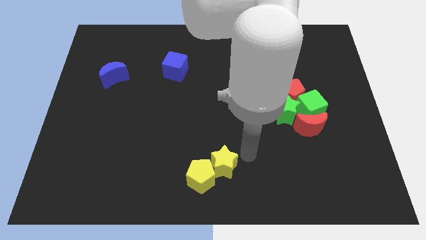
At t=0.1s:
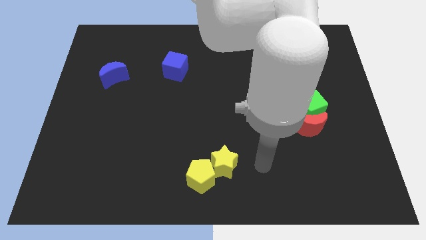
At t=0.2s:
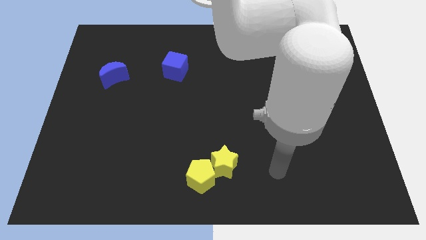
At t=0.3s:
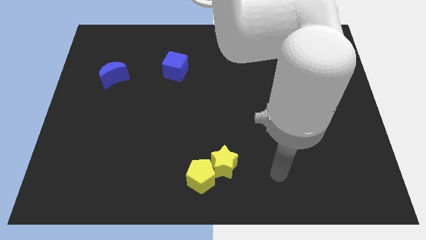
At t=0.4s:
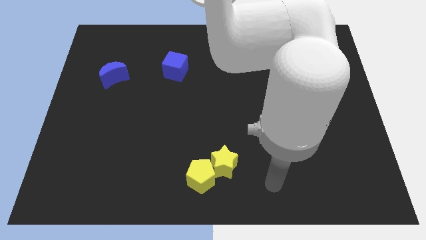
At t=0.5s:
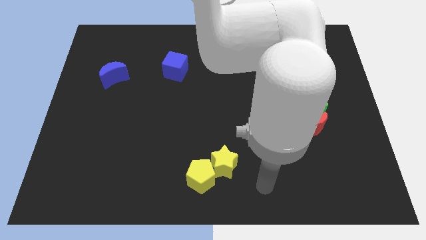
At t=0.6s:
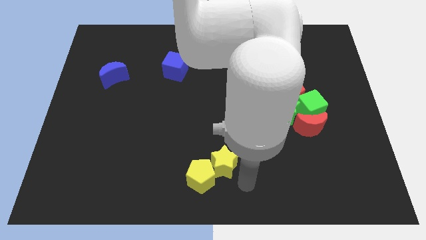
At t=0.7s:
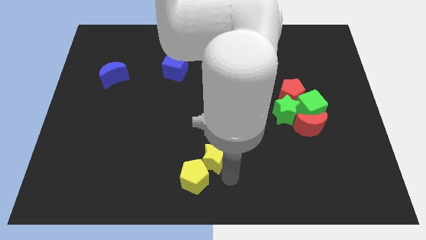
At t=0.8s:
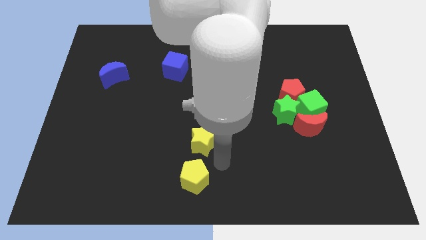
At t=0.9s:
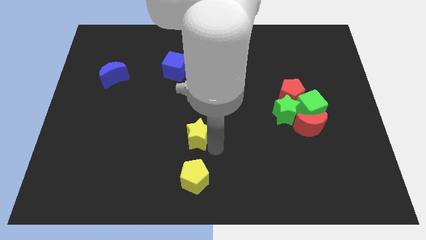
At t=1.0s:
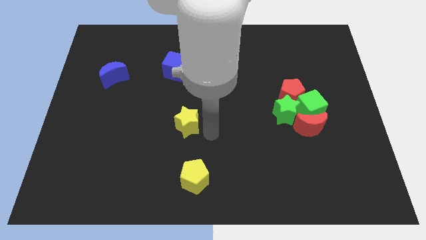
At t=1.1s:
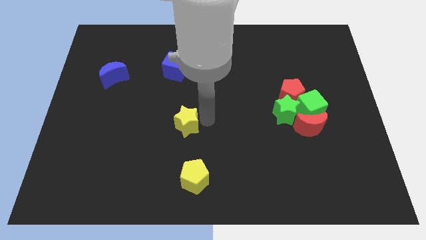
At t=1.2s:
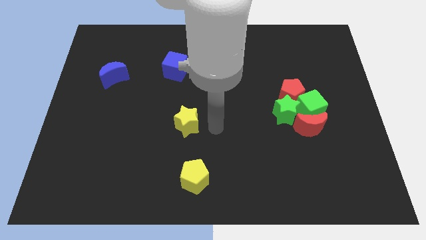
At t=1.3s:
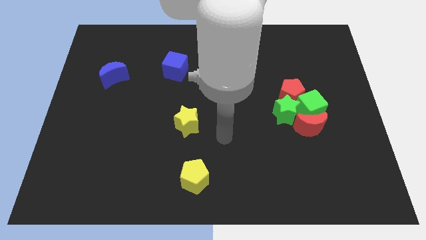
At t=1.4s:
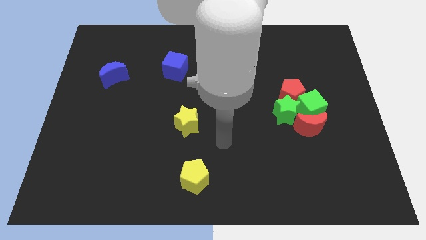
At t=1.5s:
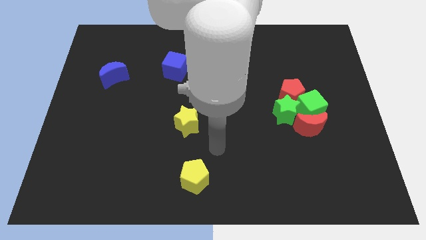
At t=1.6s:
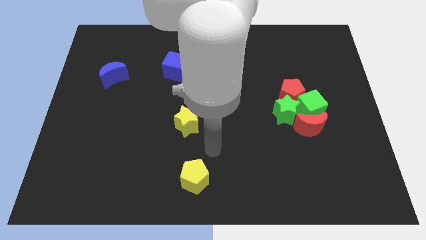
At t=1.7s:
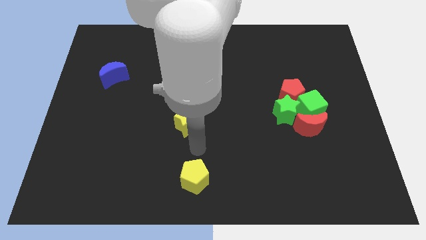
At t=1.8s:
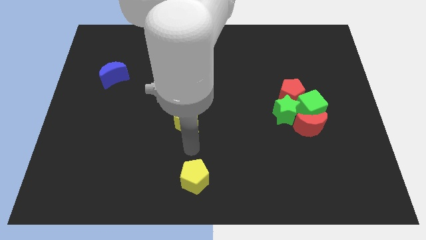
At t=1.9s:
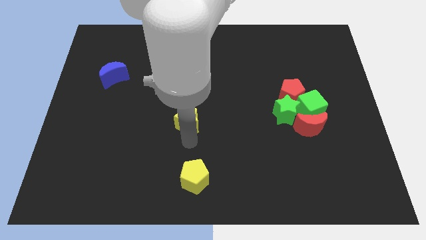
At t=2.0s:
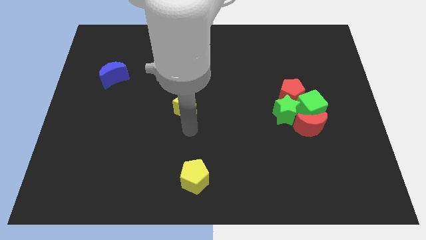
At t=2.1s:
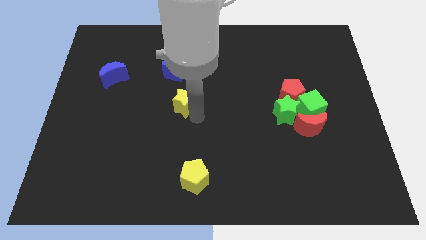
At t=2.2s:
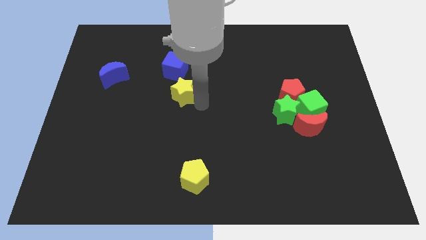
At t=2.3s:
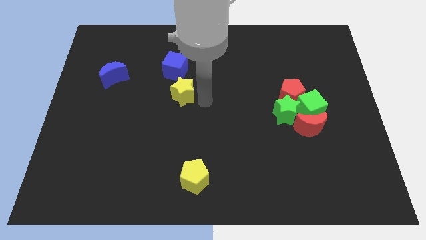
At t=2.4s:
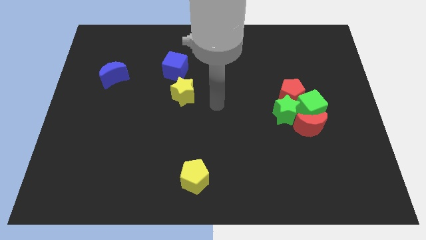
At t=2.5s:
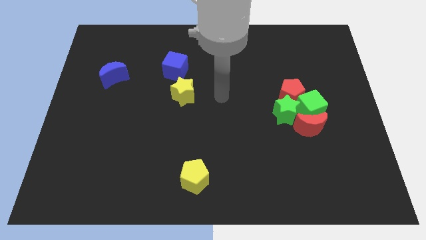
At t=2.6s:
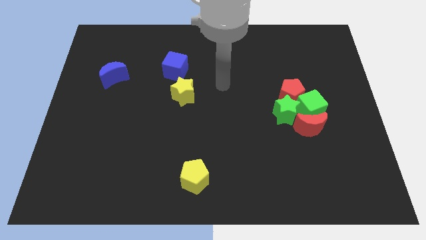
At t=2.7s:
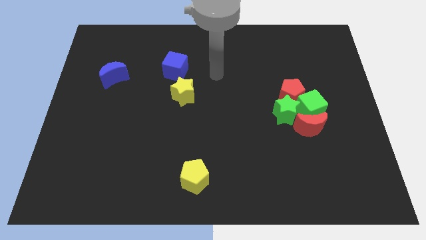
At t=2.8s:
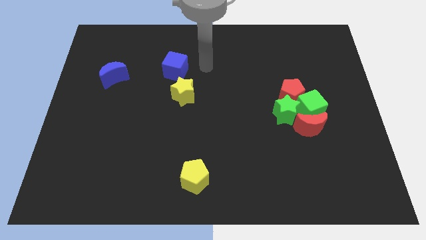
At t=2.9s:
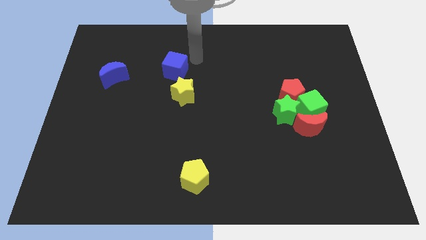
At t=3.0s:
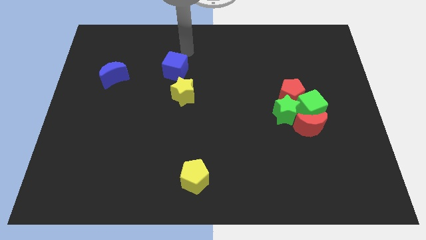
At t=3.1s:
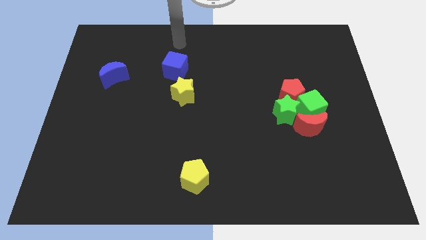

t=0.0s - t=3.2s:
separate the yellow star from the yellow pentagon

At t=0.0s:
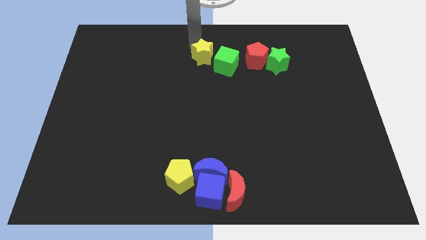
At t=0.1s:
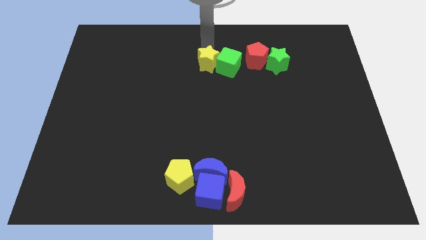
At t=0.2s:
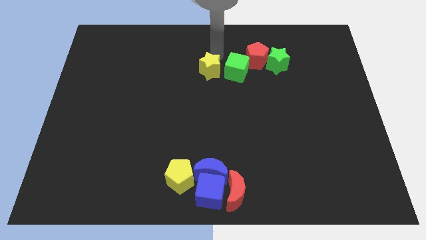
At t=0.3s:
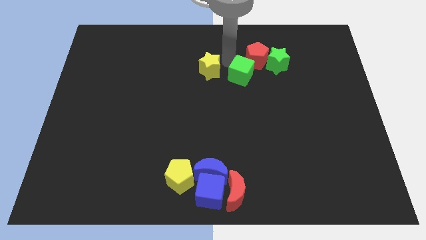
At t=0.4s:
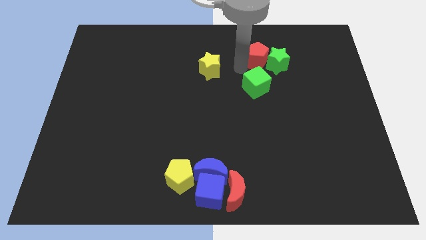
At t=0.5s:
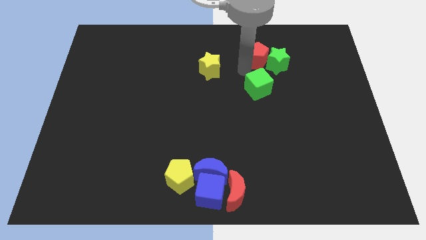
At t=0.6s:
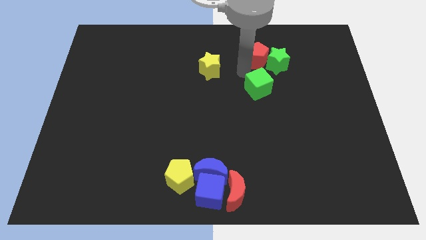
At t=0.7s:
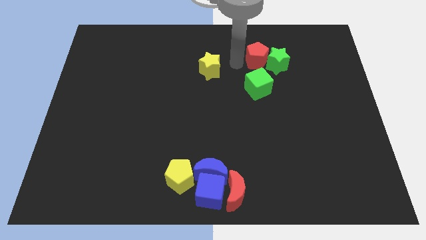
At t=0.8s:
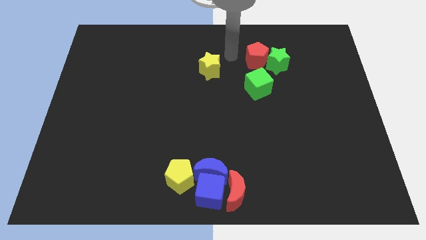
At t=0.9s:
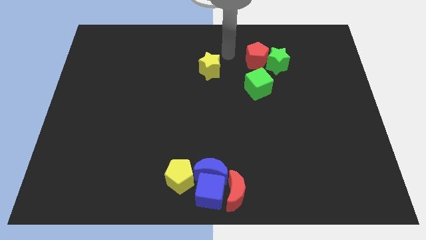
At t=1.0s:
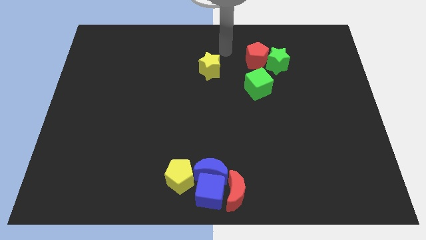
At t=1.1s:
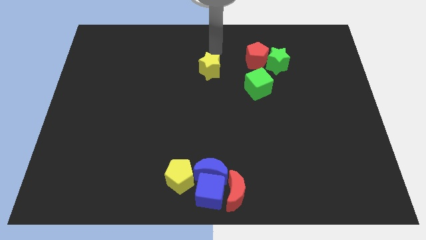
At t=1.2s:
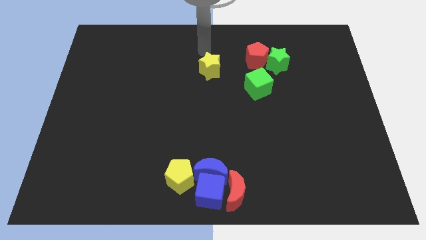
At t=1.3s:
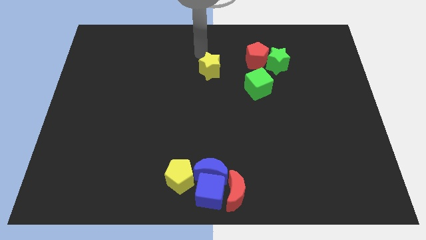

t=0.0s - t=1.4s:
slide green cube towards bottom of green star

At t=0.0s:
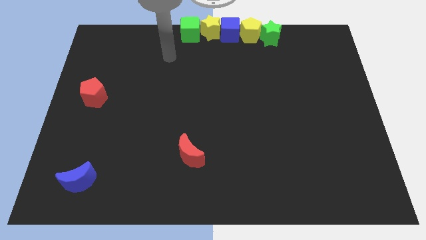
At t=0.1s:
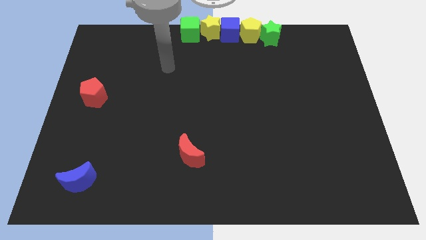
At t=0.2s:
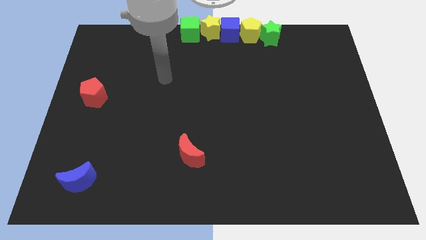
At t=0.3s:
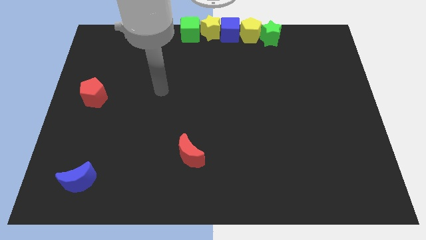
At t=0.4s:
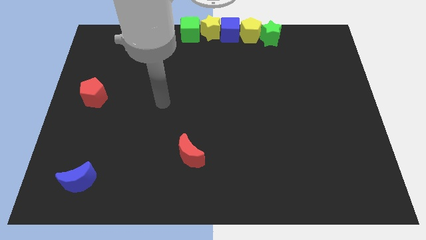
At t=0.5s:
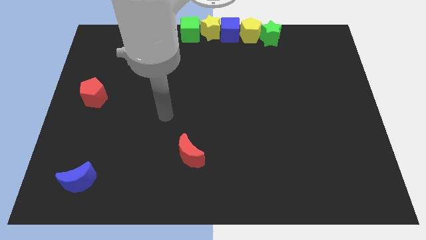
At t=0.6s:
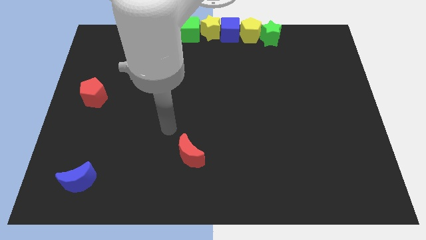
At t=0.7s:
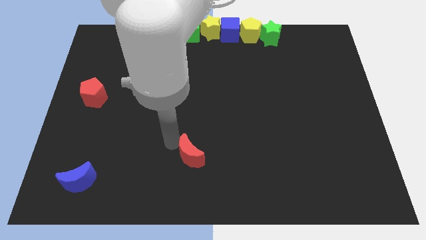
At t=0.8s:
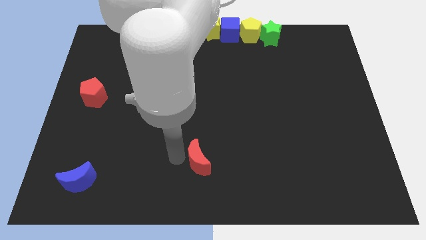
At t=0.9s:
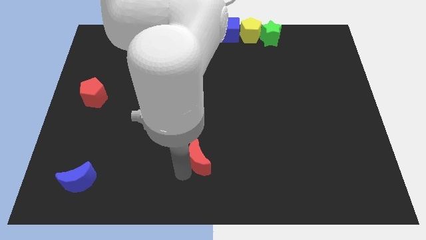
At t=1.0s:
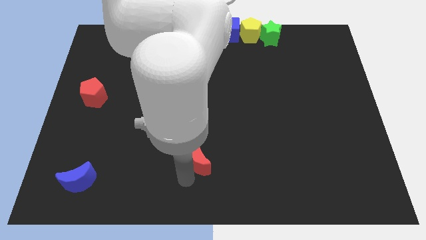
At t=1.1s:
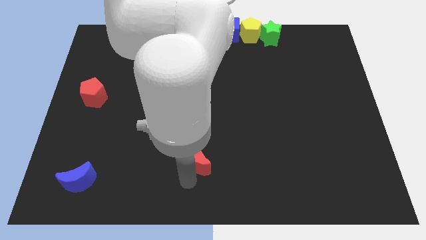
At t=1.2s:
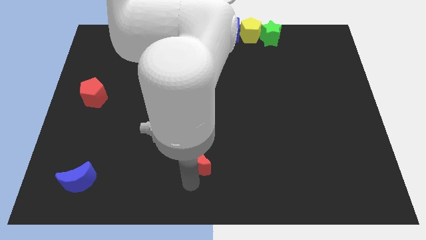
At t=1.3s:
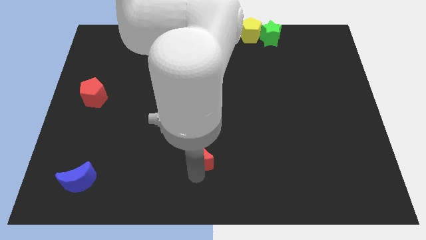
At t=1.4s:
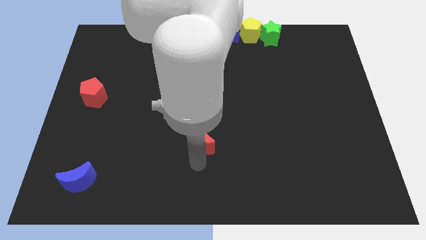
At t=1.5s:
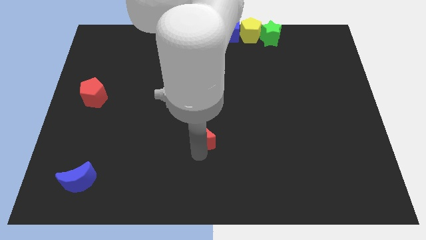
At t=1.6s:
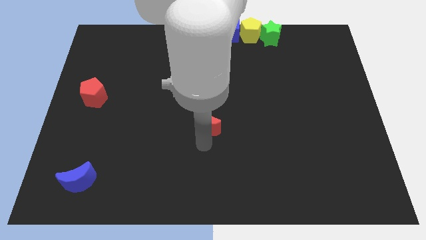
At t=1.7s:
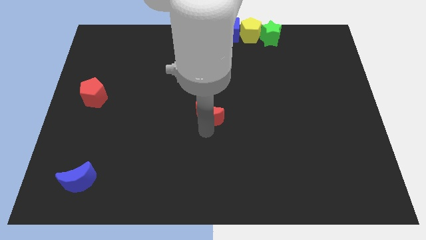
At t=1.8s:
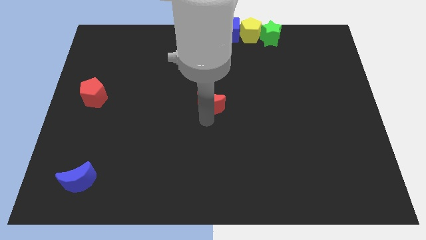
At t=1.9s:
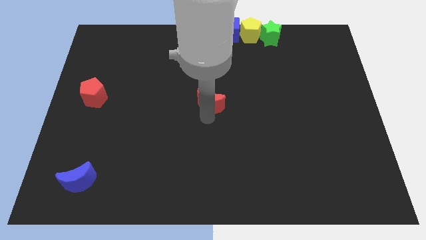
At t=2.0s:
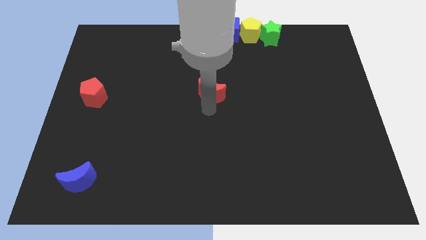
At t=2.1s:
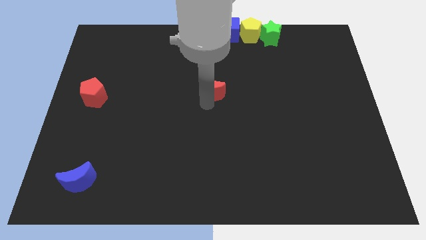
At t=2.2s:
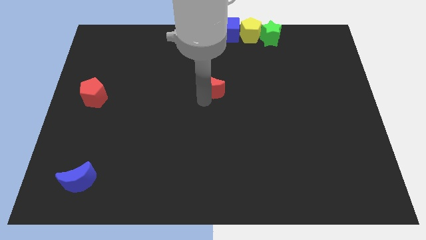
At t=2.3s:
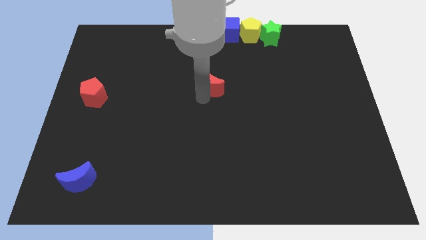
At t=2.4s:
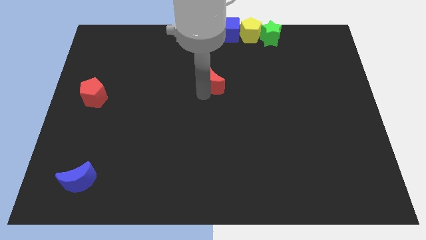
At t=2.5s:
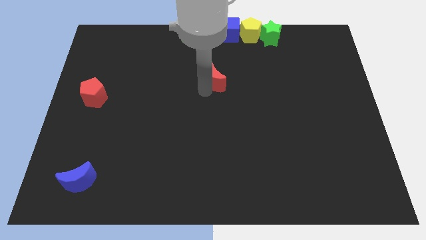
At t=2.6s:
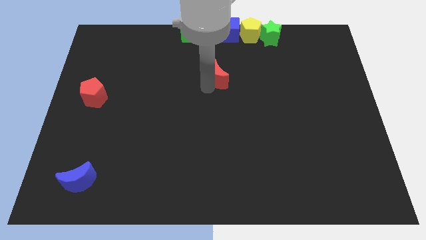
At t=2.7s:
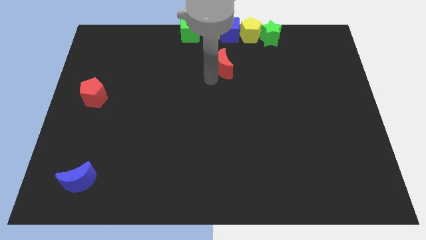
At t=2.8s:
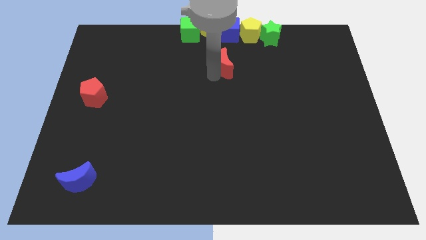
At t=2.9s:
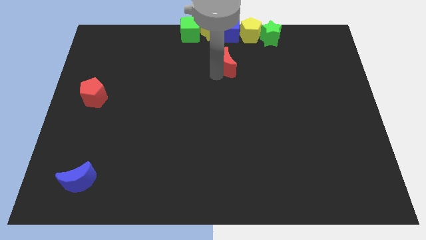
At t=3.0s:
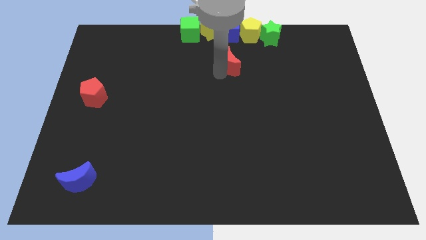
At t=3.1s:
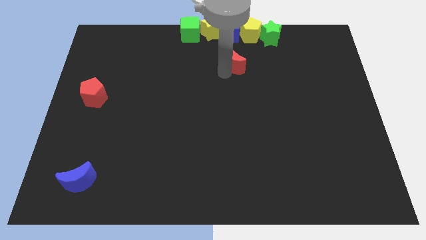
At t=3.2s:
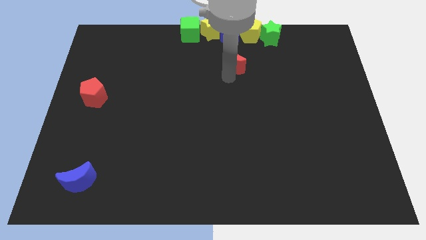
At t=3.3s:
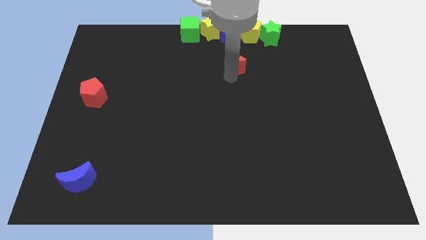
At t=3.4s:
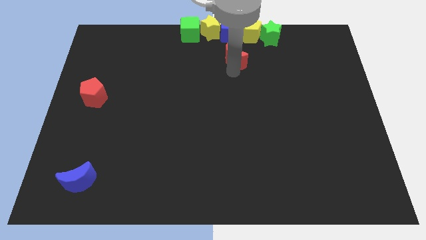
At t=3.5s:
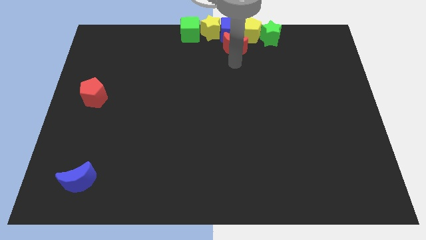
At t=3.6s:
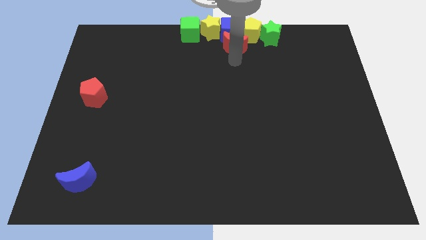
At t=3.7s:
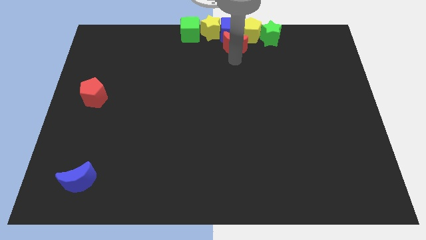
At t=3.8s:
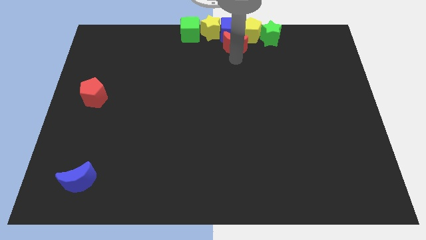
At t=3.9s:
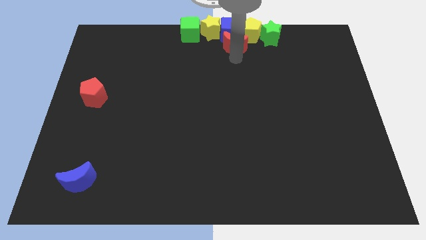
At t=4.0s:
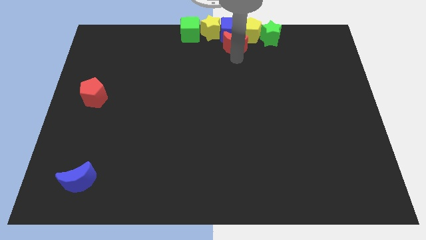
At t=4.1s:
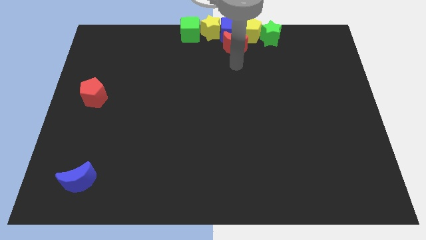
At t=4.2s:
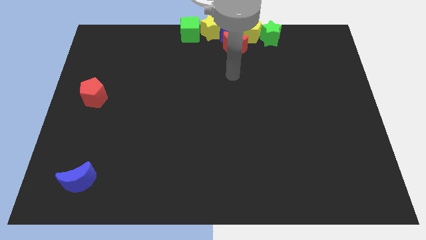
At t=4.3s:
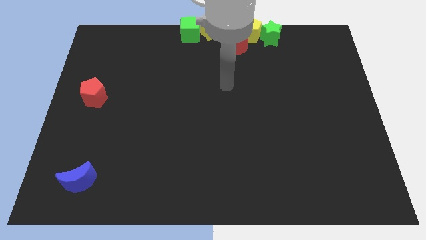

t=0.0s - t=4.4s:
move the red crescent below the blue cube
